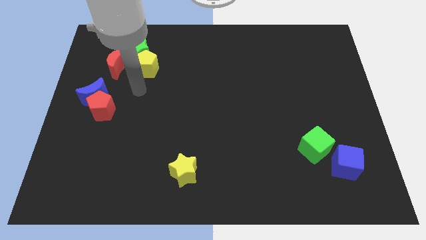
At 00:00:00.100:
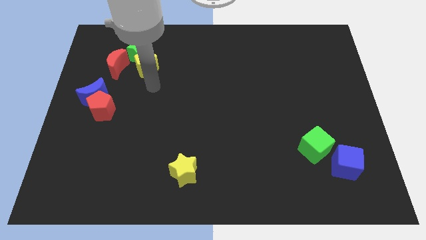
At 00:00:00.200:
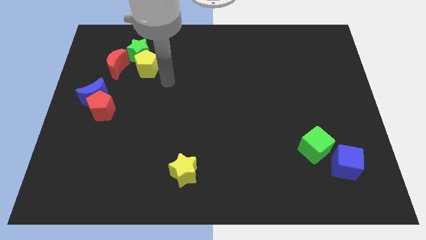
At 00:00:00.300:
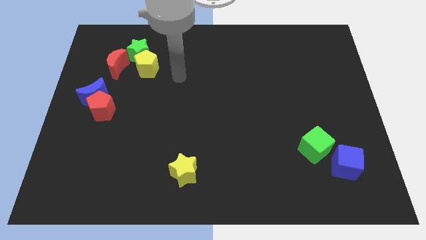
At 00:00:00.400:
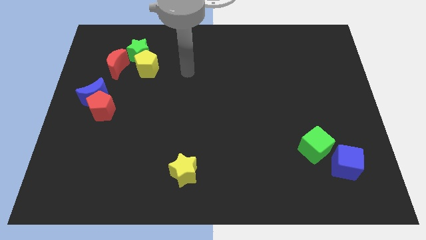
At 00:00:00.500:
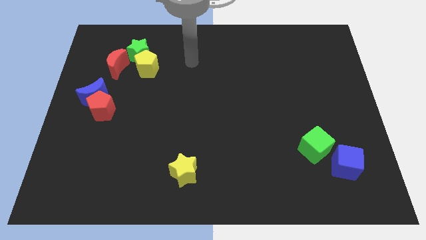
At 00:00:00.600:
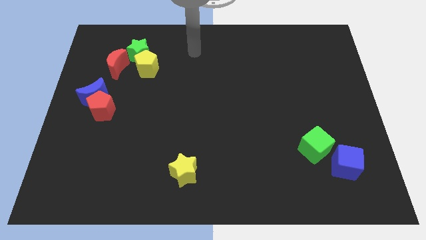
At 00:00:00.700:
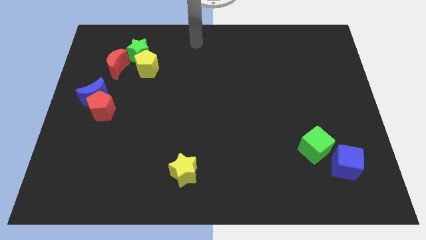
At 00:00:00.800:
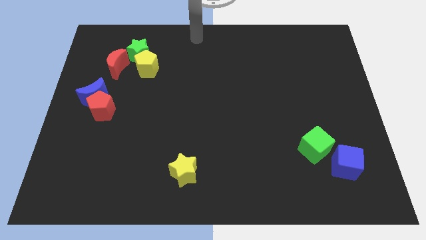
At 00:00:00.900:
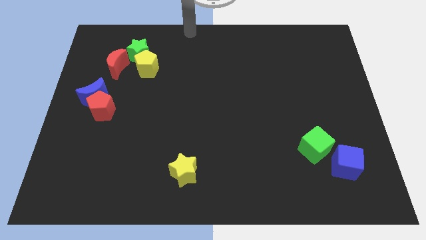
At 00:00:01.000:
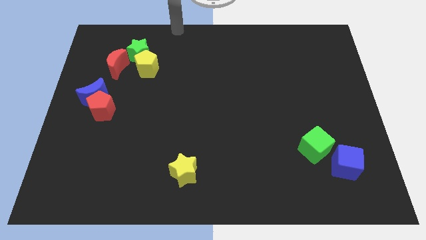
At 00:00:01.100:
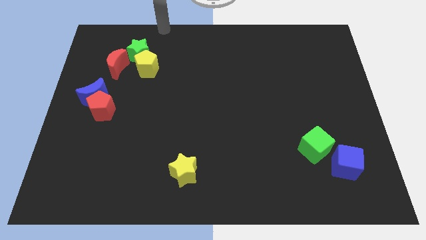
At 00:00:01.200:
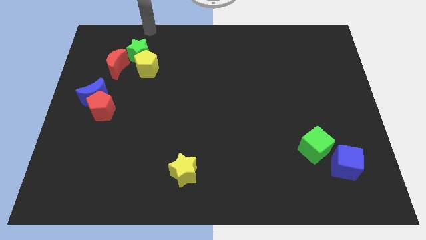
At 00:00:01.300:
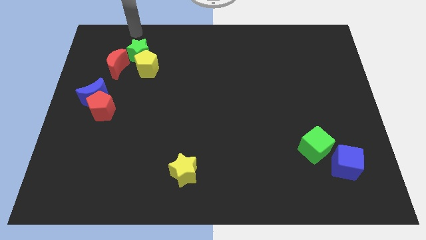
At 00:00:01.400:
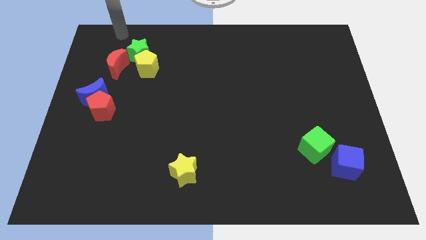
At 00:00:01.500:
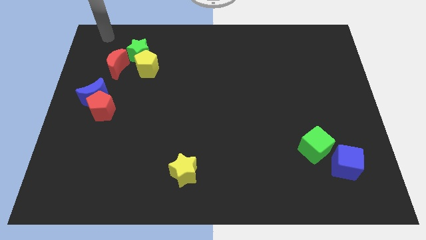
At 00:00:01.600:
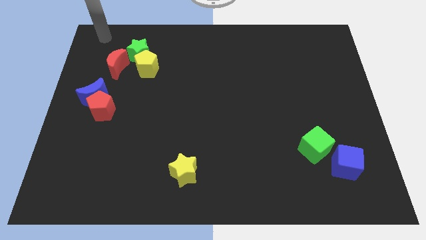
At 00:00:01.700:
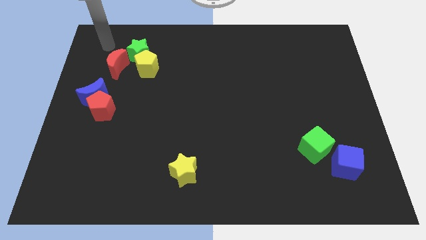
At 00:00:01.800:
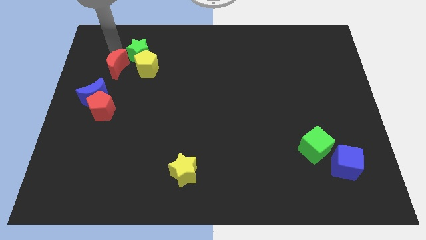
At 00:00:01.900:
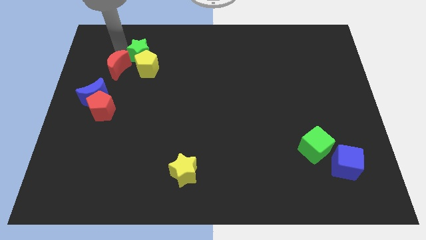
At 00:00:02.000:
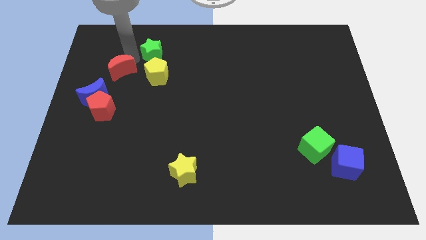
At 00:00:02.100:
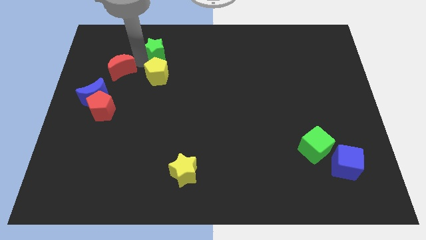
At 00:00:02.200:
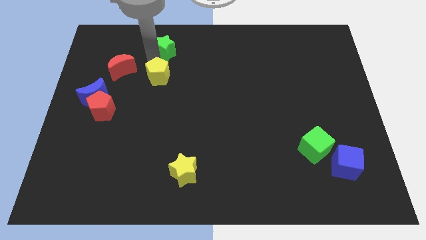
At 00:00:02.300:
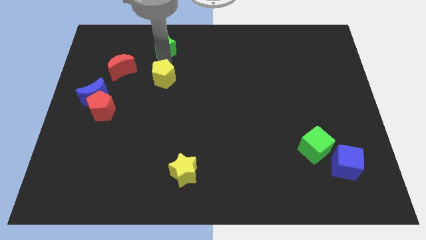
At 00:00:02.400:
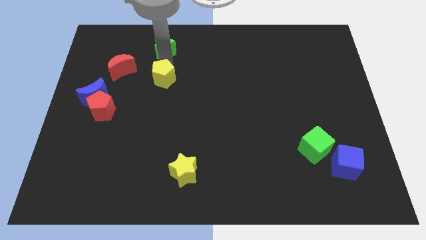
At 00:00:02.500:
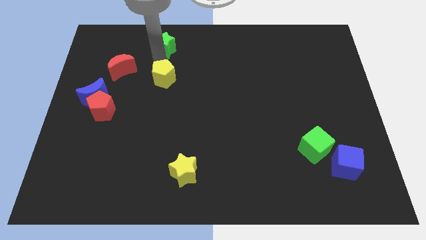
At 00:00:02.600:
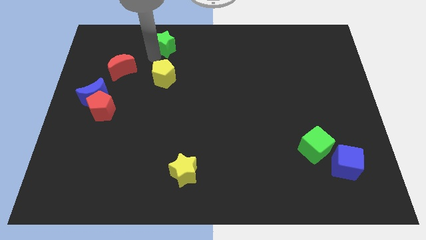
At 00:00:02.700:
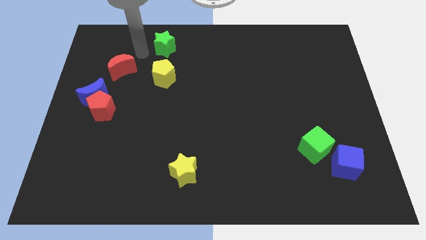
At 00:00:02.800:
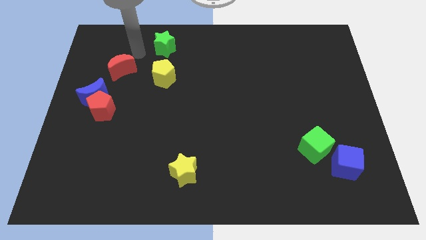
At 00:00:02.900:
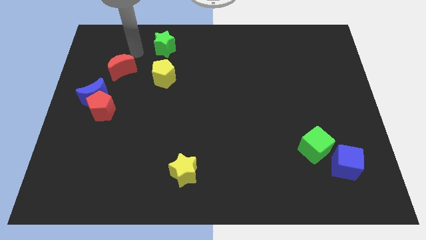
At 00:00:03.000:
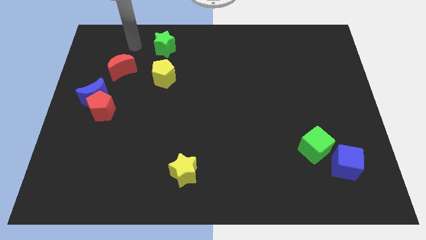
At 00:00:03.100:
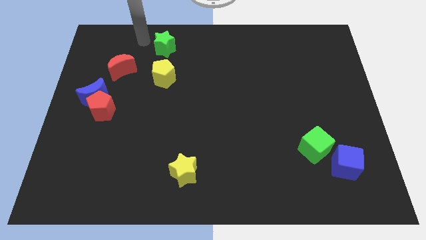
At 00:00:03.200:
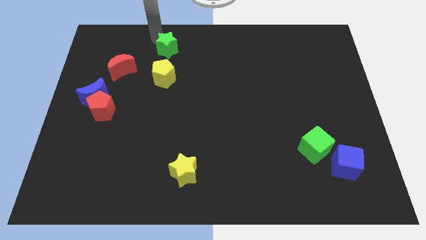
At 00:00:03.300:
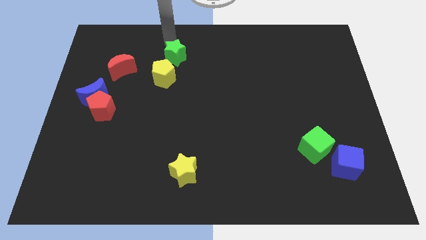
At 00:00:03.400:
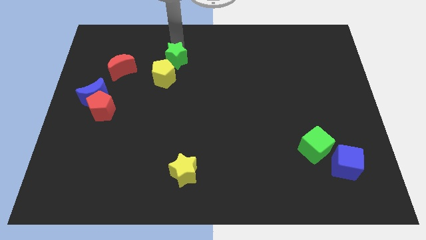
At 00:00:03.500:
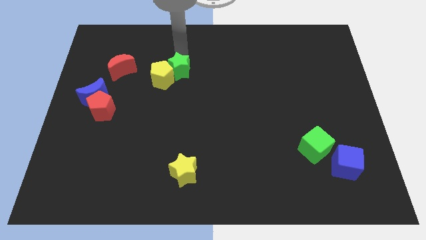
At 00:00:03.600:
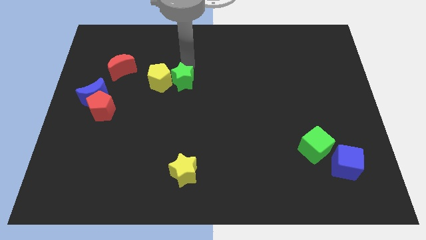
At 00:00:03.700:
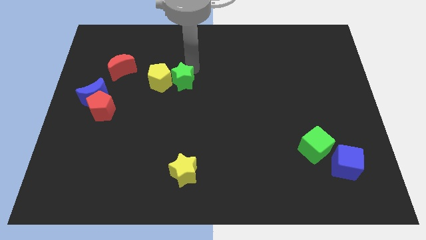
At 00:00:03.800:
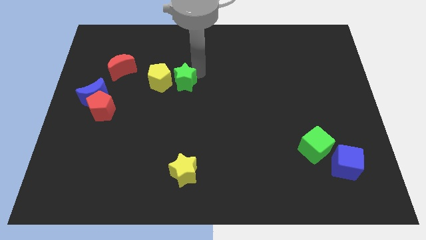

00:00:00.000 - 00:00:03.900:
push the green star to the right of the yellow pentagon

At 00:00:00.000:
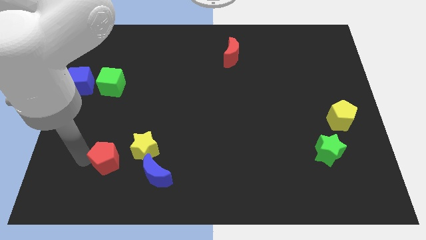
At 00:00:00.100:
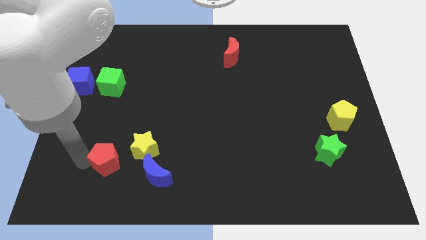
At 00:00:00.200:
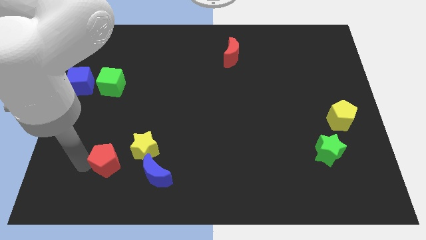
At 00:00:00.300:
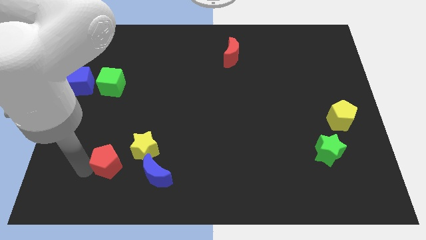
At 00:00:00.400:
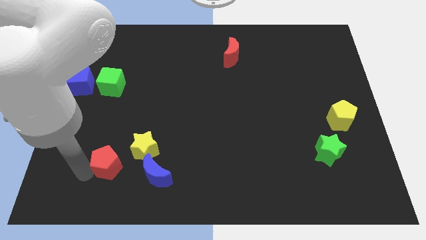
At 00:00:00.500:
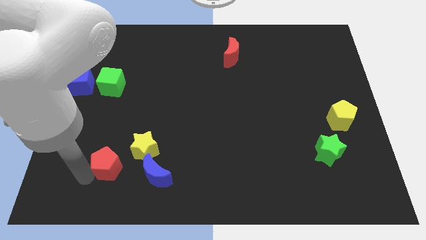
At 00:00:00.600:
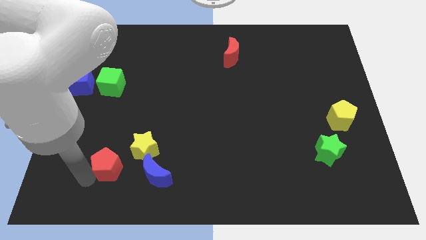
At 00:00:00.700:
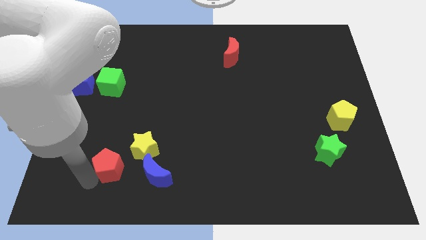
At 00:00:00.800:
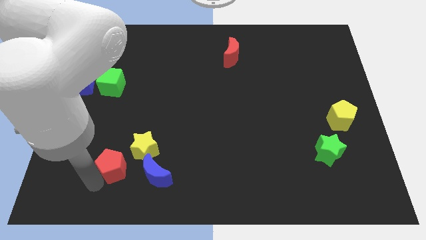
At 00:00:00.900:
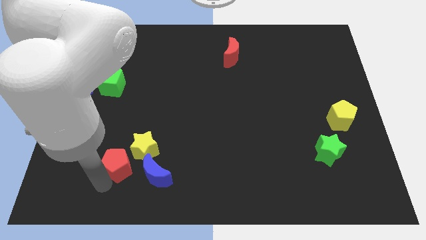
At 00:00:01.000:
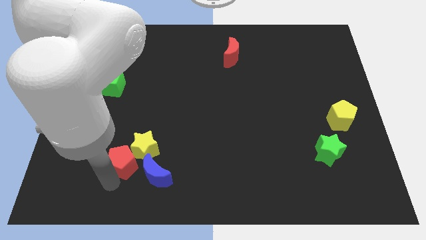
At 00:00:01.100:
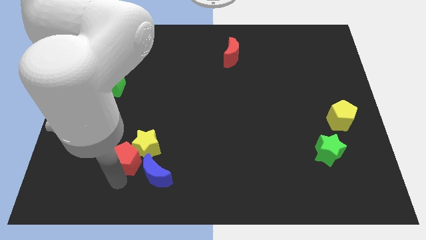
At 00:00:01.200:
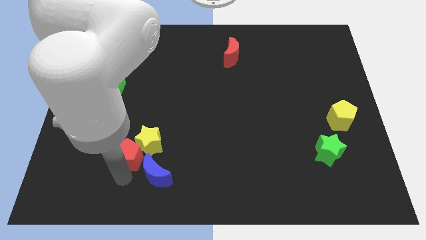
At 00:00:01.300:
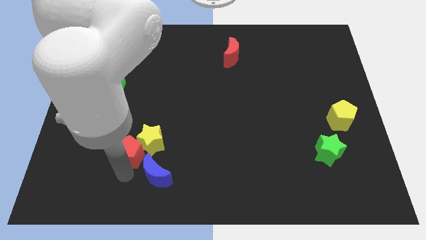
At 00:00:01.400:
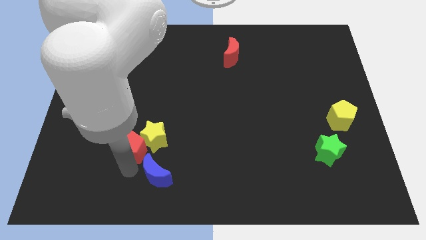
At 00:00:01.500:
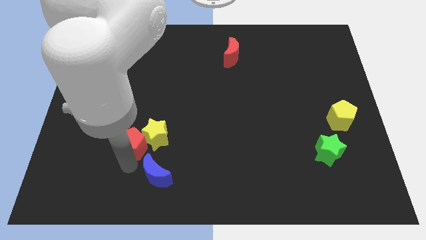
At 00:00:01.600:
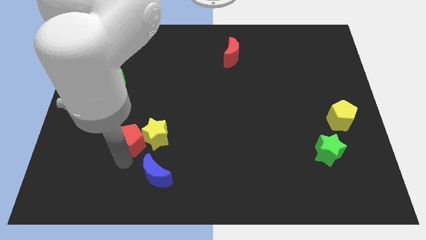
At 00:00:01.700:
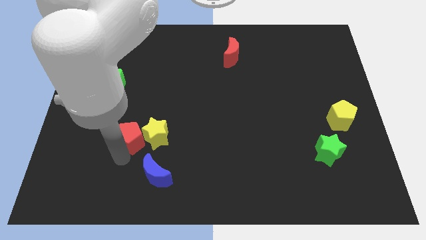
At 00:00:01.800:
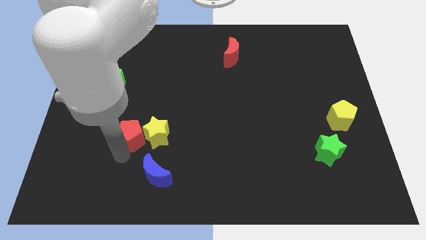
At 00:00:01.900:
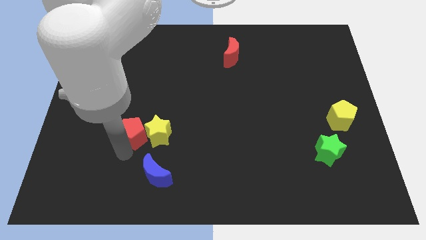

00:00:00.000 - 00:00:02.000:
move the red pentagon into the yellow star

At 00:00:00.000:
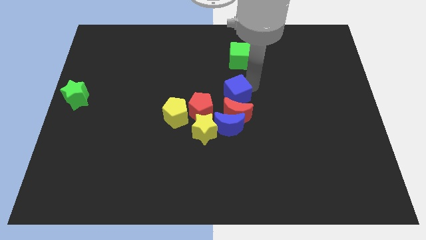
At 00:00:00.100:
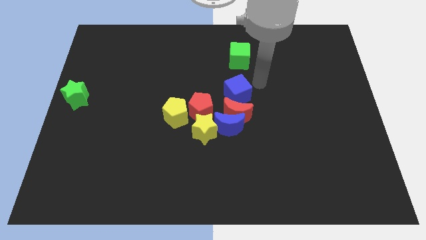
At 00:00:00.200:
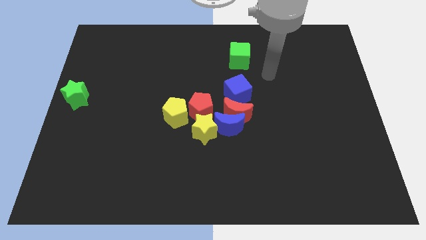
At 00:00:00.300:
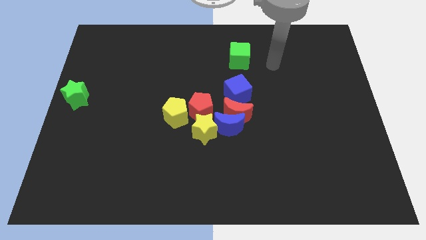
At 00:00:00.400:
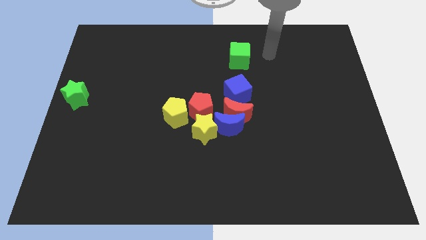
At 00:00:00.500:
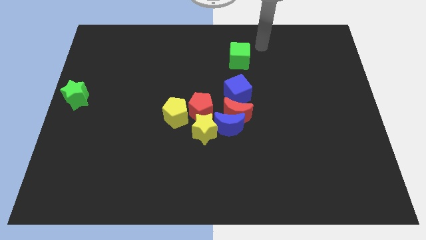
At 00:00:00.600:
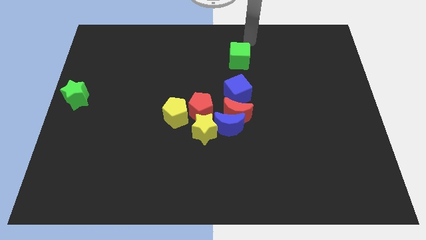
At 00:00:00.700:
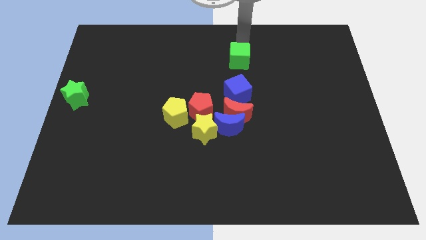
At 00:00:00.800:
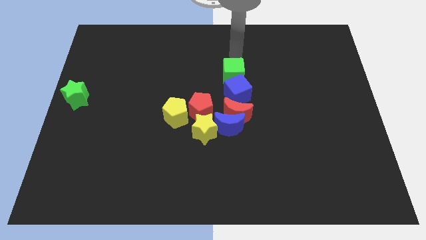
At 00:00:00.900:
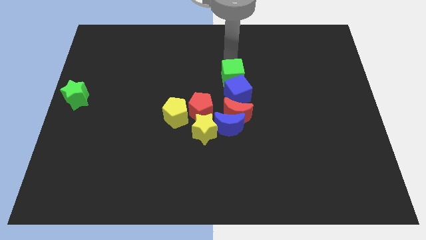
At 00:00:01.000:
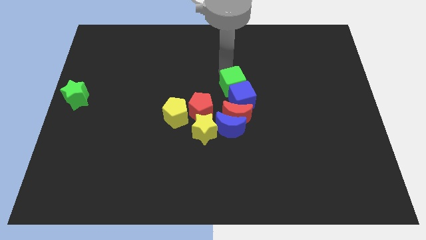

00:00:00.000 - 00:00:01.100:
drag the green cube into the top side of the blue cube

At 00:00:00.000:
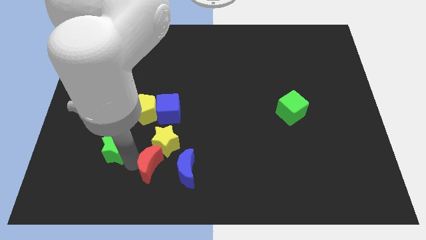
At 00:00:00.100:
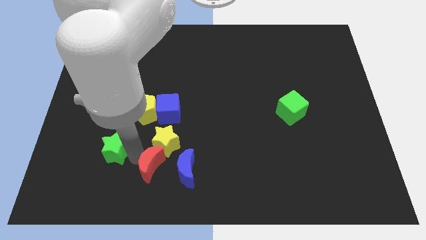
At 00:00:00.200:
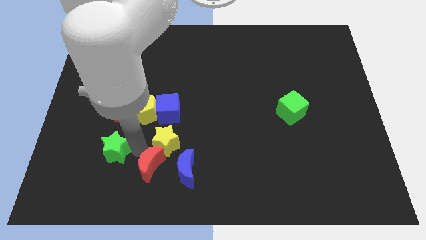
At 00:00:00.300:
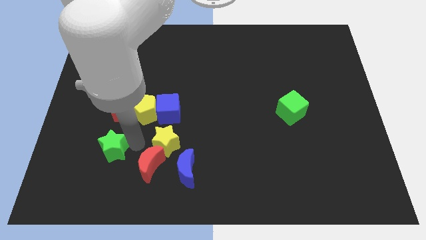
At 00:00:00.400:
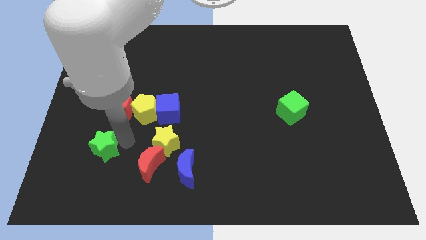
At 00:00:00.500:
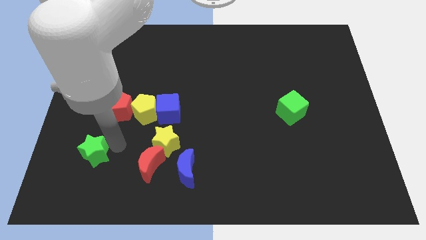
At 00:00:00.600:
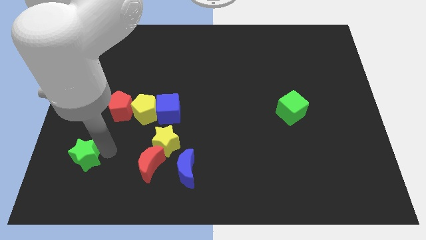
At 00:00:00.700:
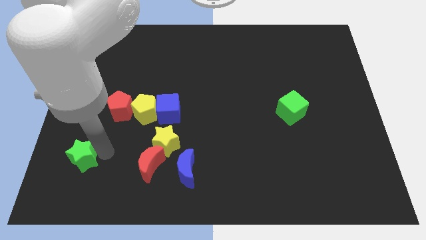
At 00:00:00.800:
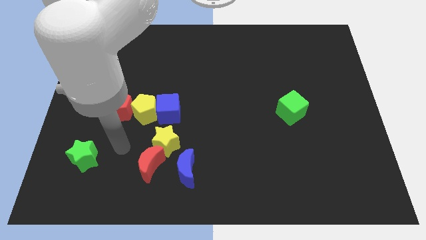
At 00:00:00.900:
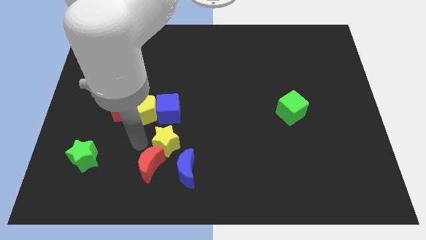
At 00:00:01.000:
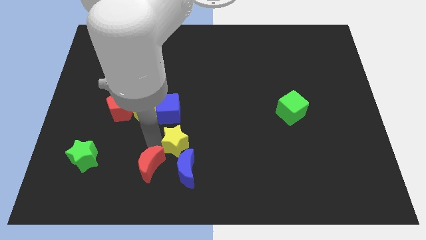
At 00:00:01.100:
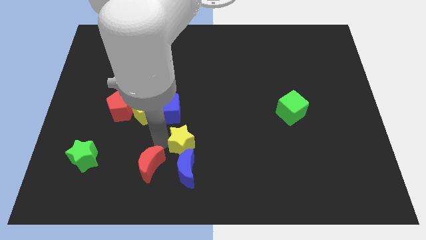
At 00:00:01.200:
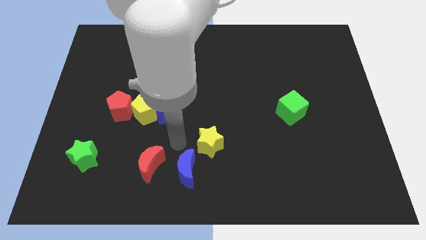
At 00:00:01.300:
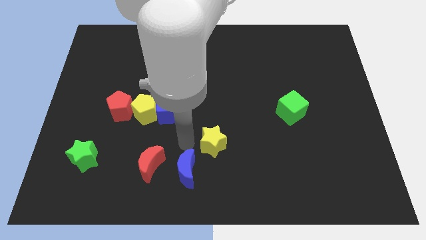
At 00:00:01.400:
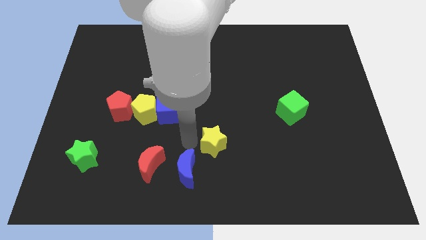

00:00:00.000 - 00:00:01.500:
slightly push the green star to the left of the board

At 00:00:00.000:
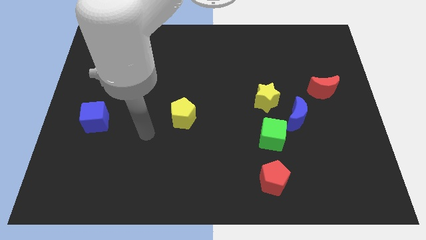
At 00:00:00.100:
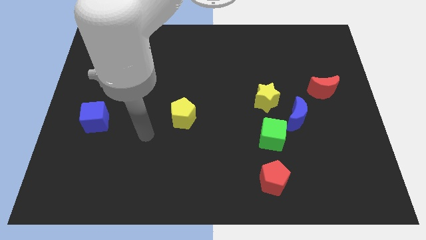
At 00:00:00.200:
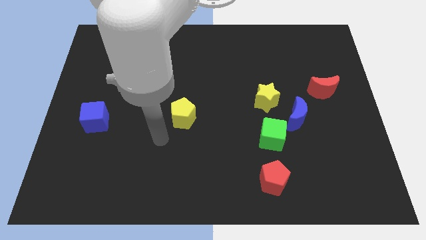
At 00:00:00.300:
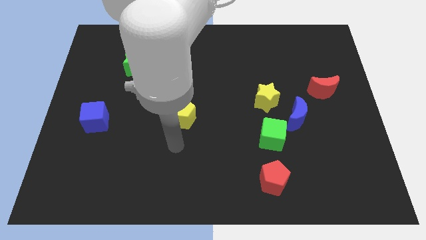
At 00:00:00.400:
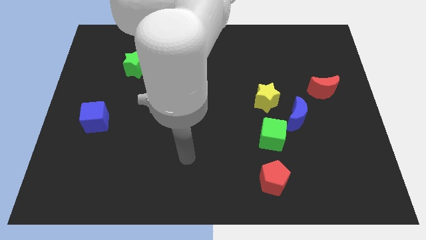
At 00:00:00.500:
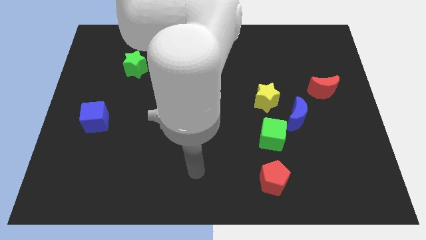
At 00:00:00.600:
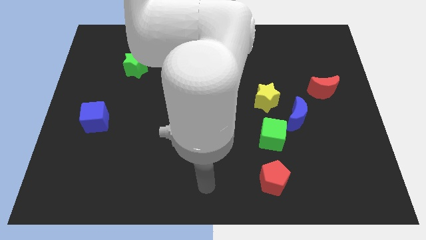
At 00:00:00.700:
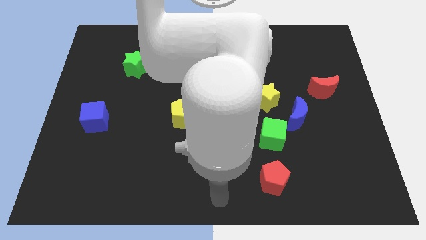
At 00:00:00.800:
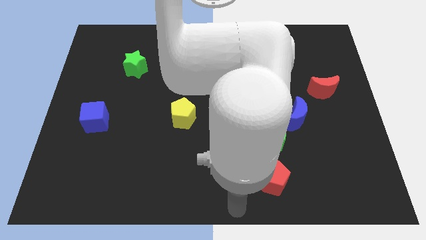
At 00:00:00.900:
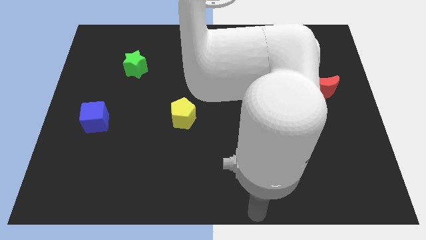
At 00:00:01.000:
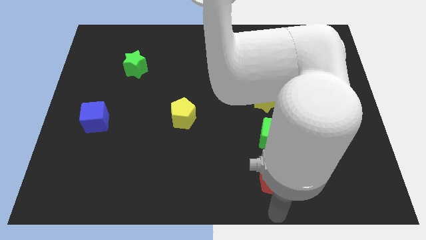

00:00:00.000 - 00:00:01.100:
slide your arm to the bottom side of red pentagon
